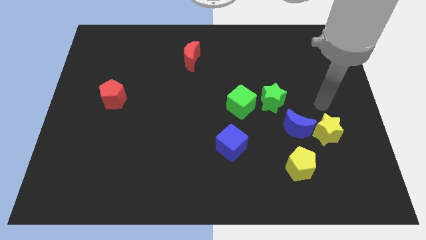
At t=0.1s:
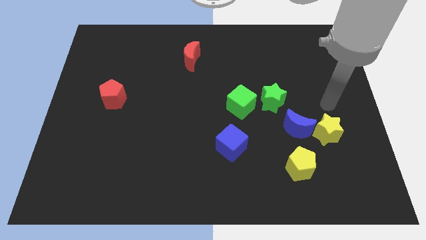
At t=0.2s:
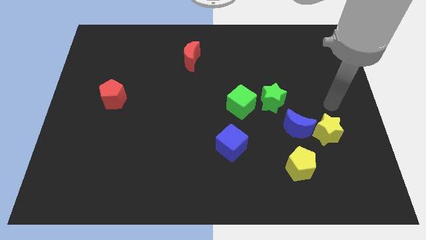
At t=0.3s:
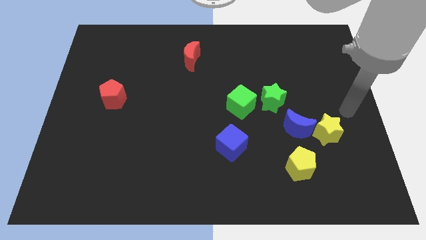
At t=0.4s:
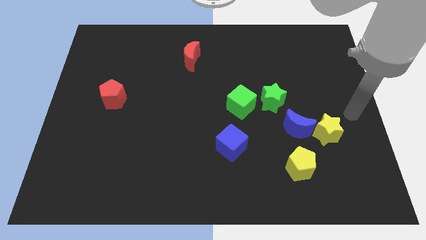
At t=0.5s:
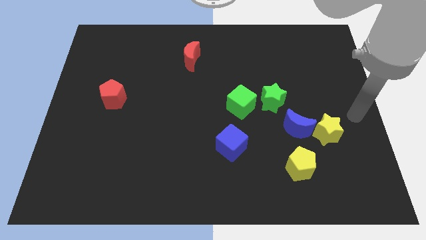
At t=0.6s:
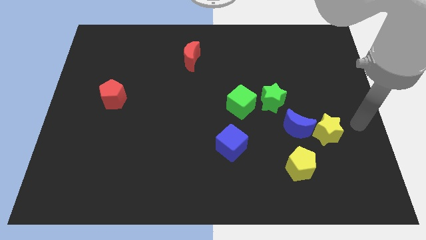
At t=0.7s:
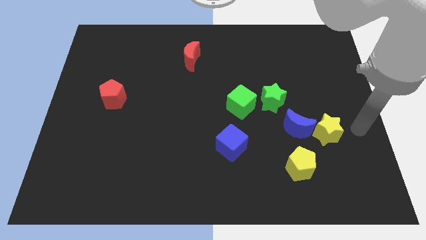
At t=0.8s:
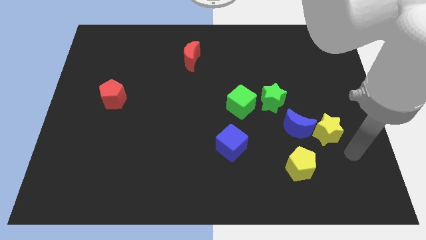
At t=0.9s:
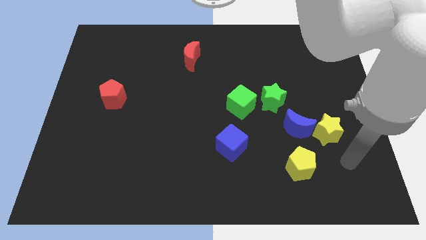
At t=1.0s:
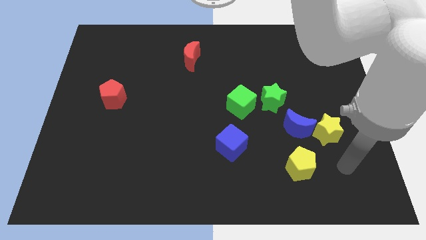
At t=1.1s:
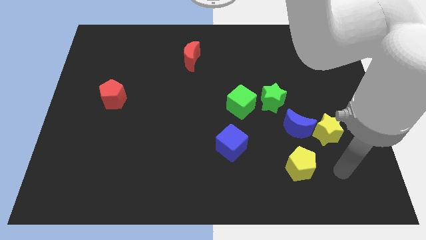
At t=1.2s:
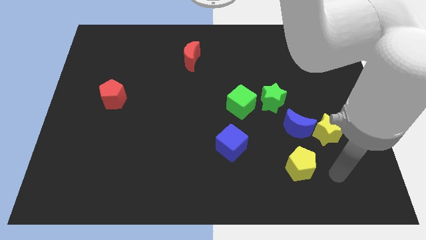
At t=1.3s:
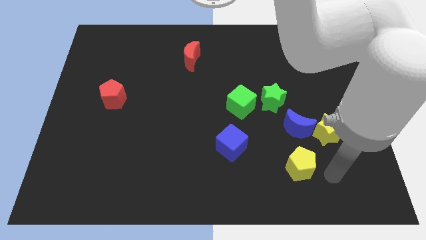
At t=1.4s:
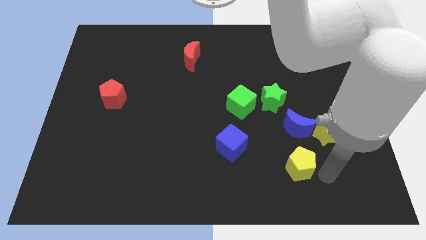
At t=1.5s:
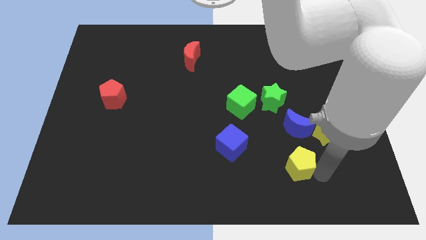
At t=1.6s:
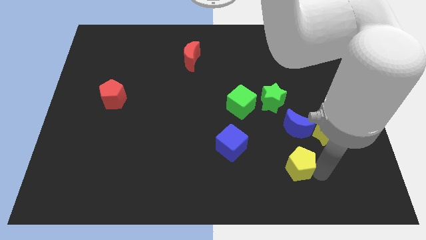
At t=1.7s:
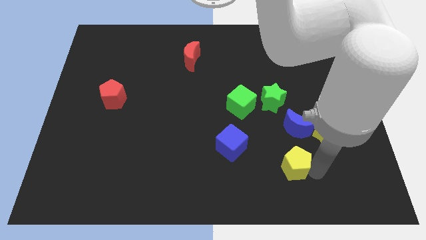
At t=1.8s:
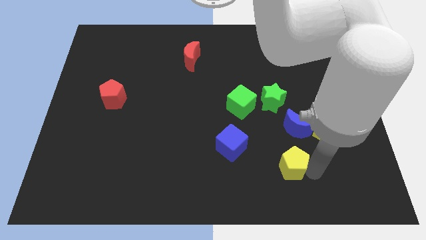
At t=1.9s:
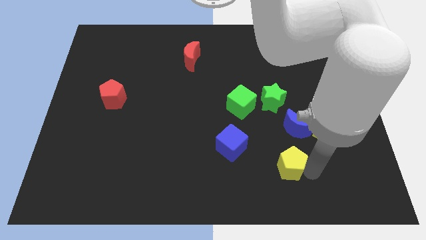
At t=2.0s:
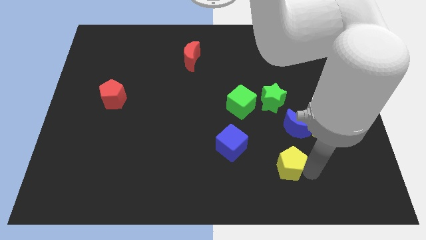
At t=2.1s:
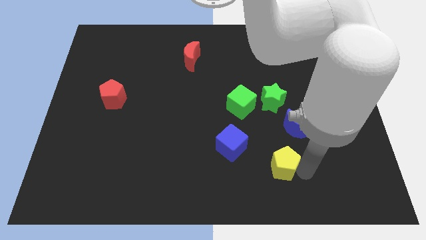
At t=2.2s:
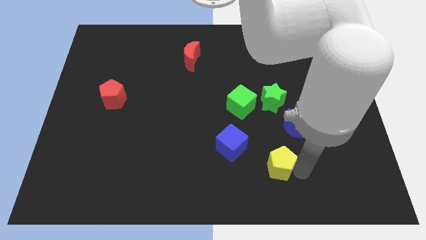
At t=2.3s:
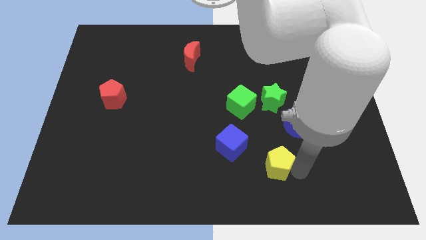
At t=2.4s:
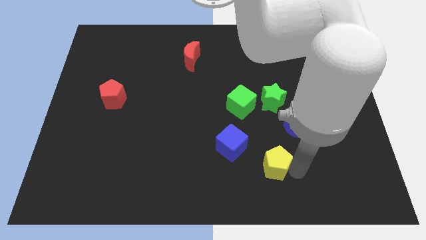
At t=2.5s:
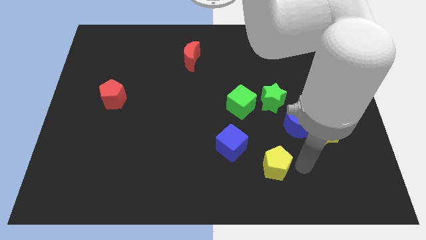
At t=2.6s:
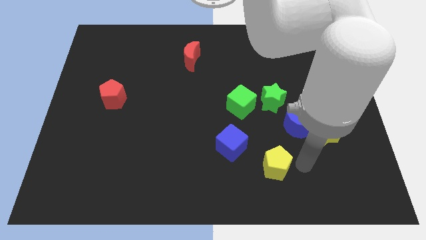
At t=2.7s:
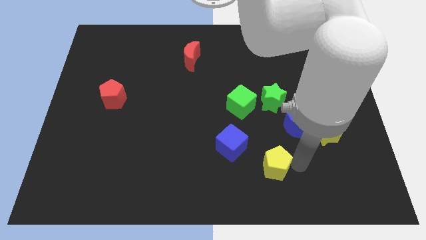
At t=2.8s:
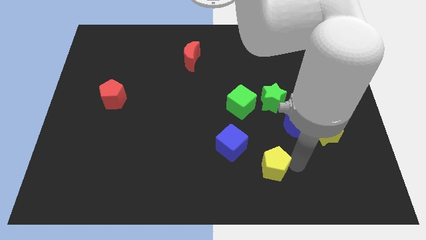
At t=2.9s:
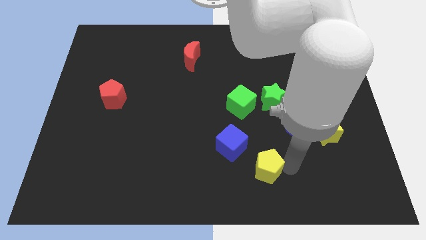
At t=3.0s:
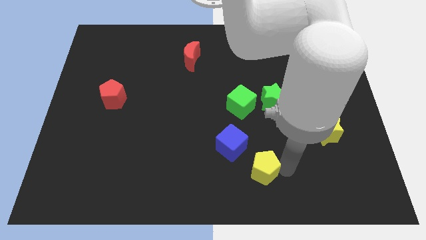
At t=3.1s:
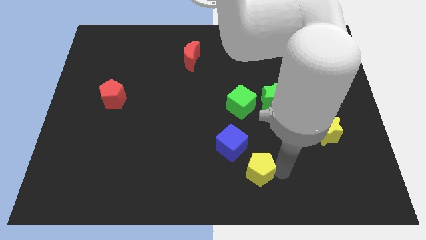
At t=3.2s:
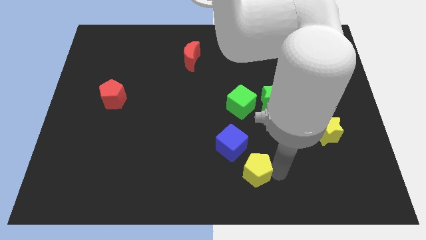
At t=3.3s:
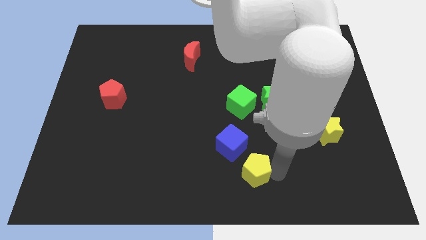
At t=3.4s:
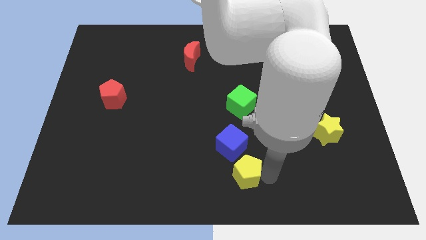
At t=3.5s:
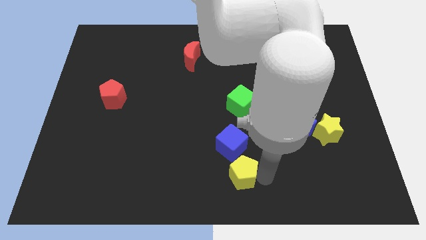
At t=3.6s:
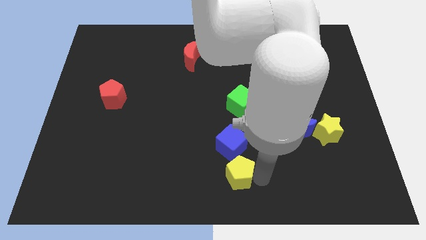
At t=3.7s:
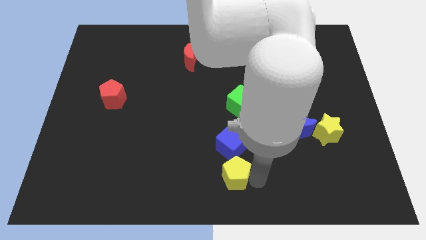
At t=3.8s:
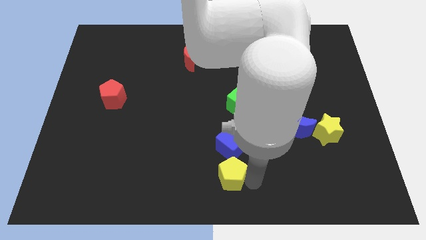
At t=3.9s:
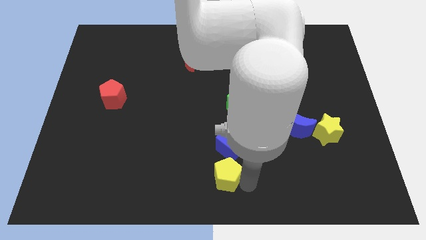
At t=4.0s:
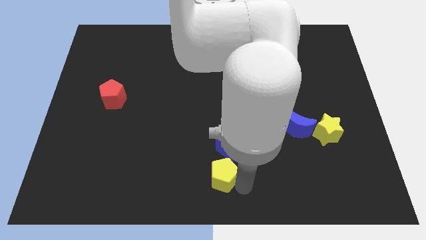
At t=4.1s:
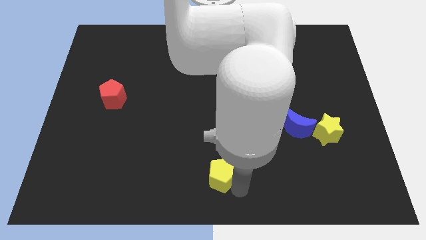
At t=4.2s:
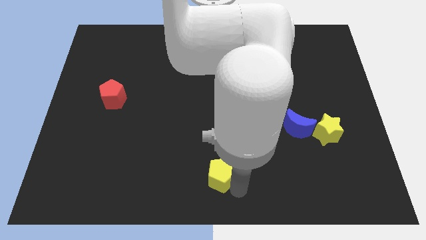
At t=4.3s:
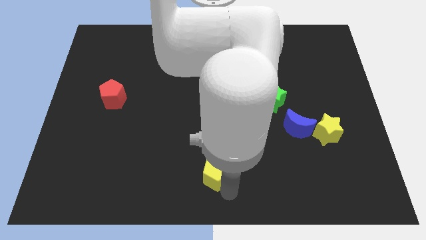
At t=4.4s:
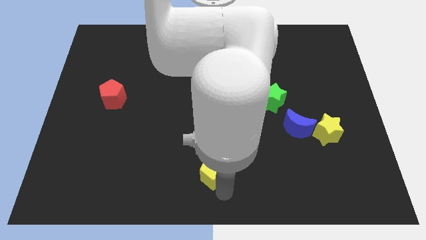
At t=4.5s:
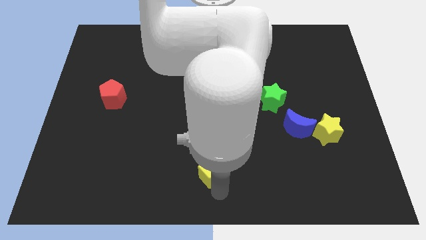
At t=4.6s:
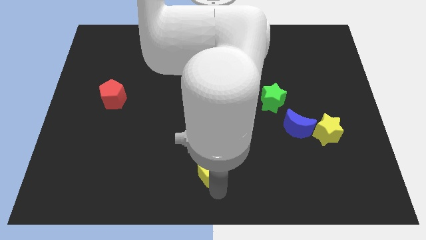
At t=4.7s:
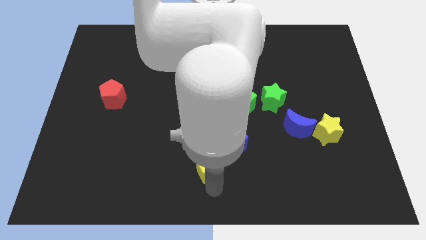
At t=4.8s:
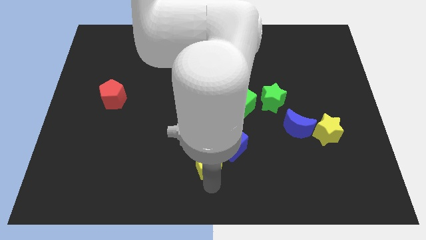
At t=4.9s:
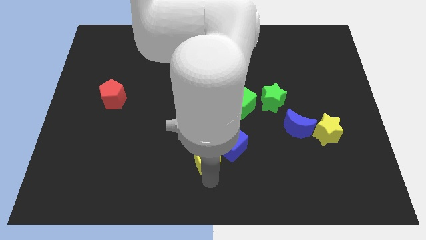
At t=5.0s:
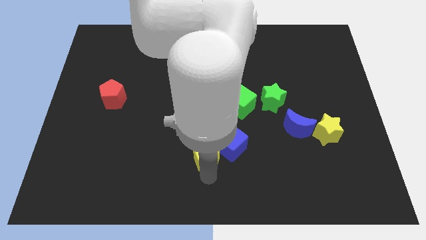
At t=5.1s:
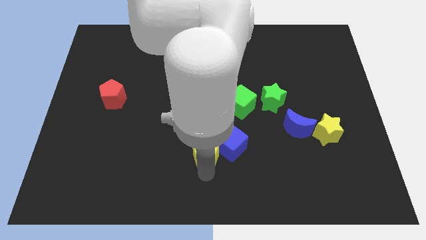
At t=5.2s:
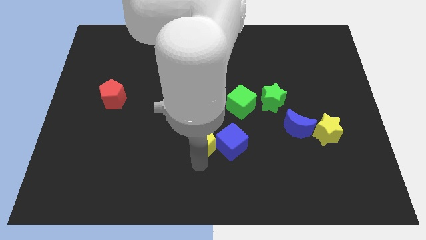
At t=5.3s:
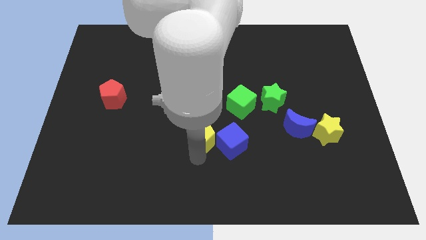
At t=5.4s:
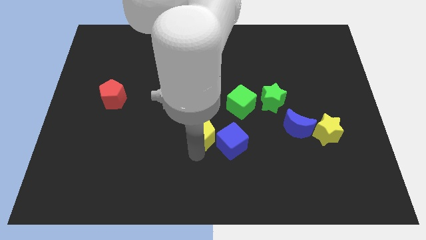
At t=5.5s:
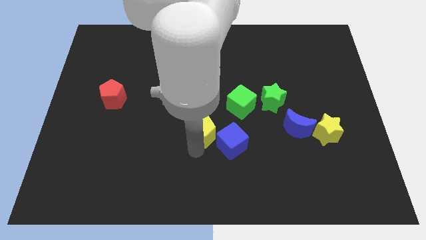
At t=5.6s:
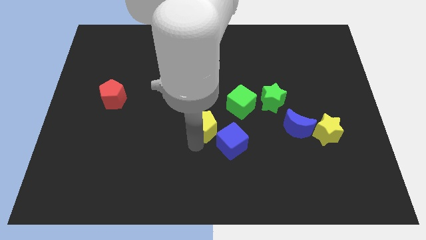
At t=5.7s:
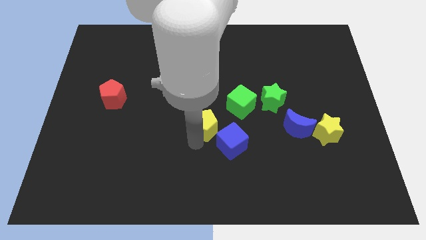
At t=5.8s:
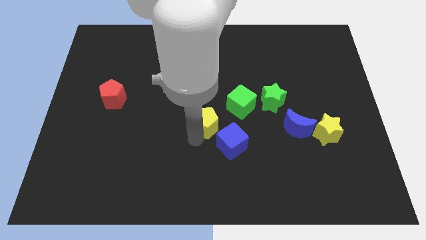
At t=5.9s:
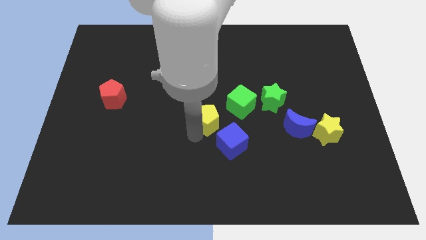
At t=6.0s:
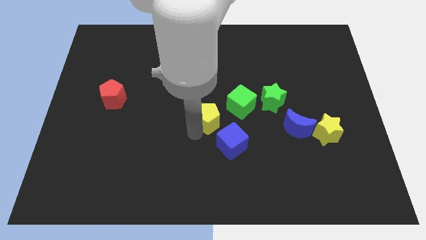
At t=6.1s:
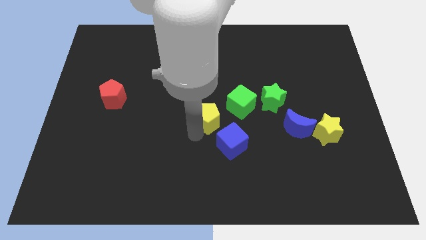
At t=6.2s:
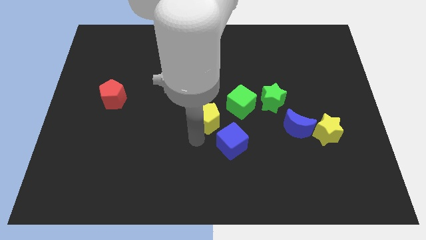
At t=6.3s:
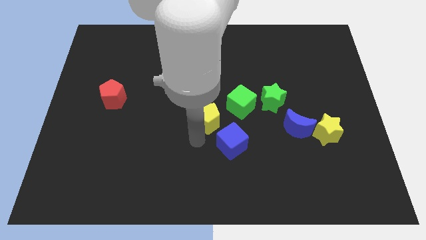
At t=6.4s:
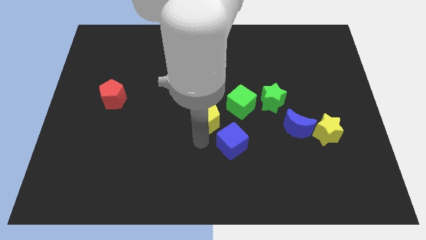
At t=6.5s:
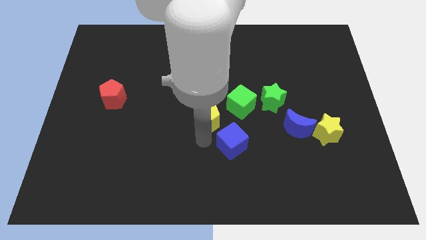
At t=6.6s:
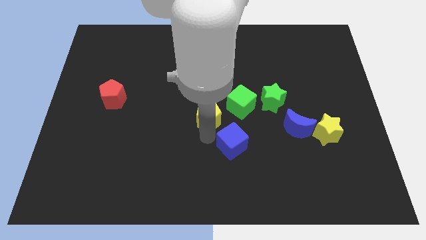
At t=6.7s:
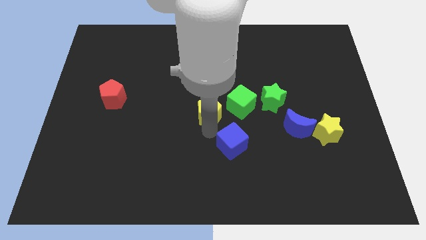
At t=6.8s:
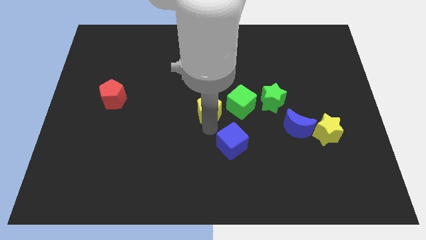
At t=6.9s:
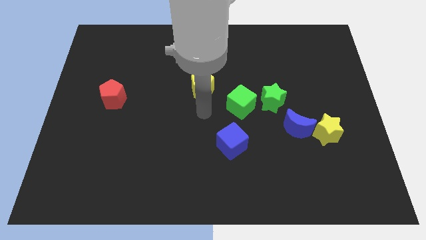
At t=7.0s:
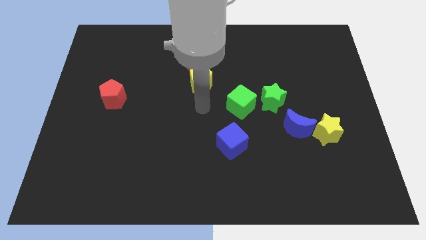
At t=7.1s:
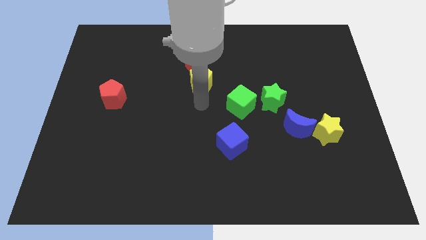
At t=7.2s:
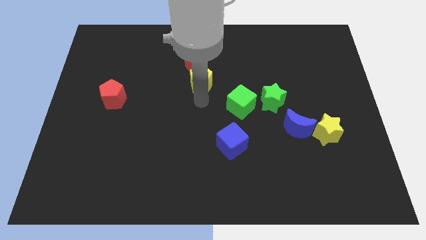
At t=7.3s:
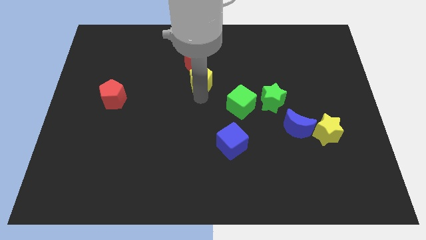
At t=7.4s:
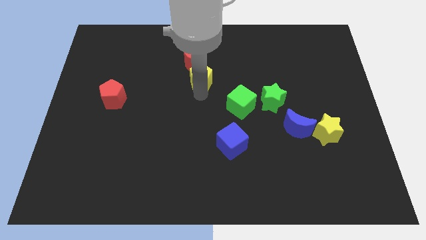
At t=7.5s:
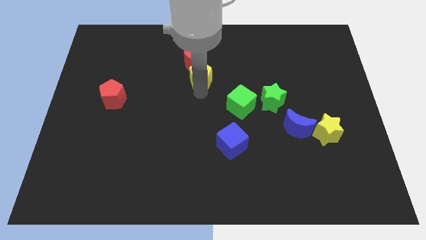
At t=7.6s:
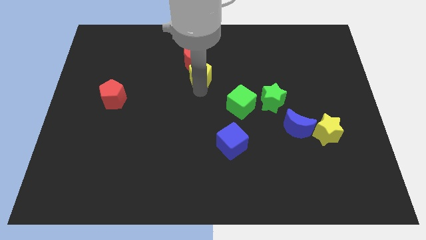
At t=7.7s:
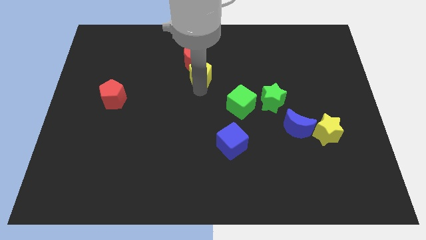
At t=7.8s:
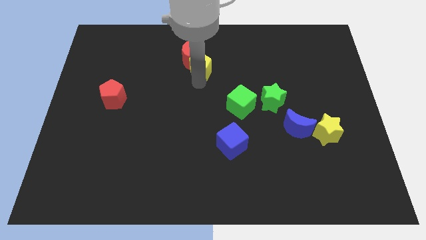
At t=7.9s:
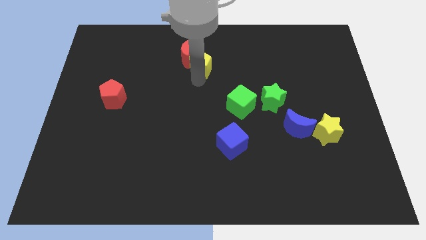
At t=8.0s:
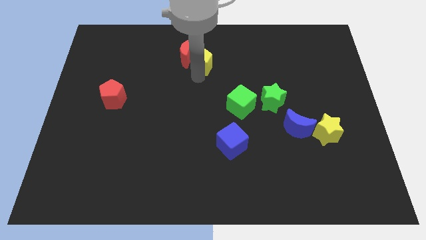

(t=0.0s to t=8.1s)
push the yellow pentagon to the red moon

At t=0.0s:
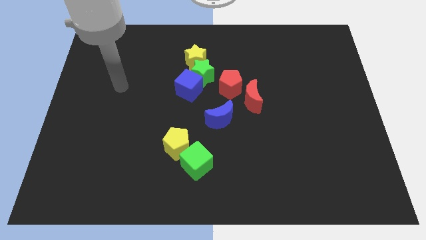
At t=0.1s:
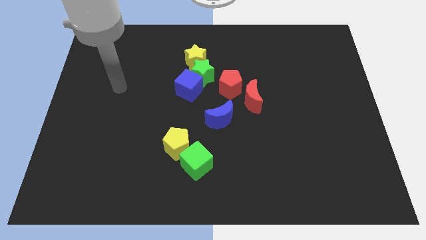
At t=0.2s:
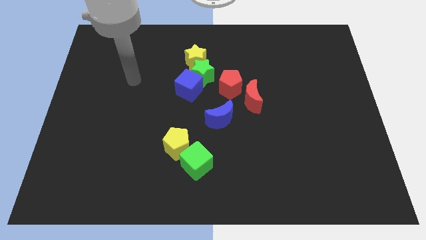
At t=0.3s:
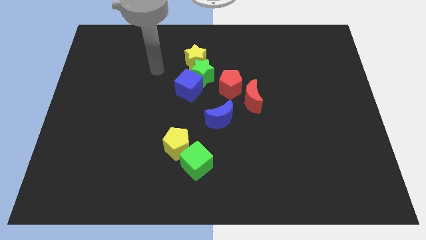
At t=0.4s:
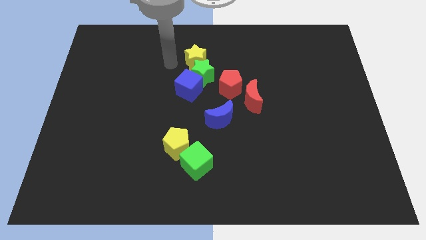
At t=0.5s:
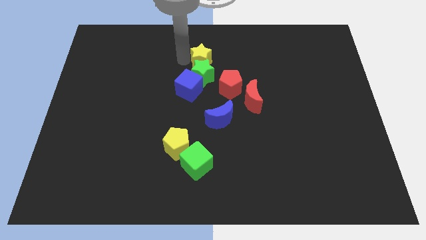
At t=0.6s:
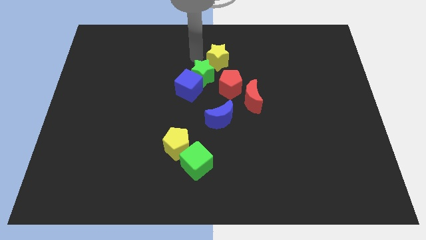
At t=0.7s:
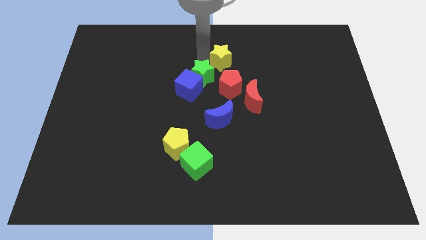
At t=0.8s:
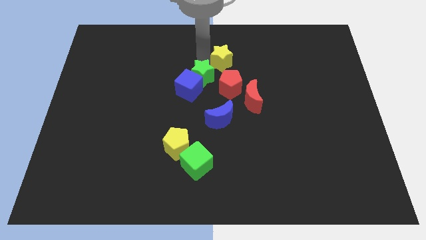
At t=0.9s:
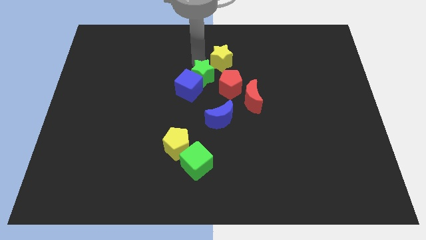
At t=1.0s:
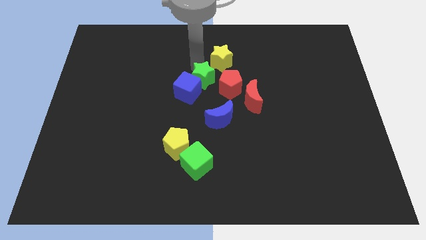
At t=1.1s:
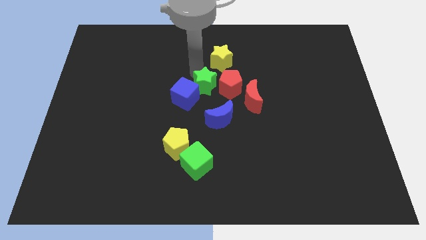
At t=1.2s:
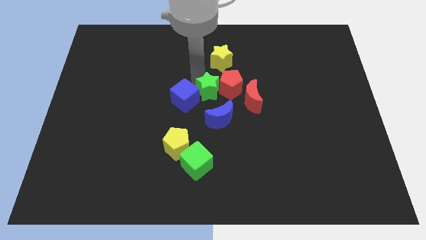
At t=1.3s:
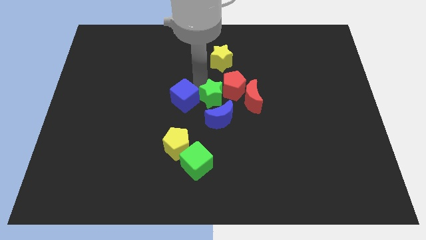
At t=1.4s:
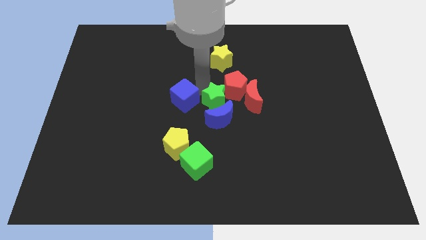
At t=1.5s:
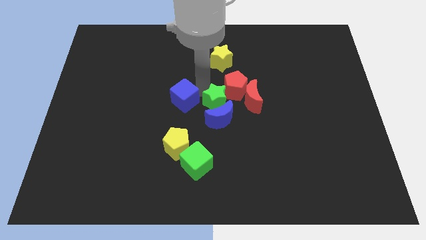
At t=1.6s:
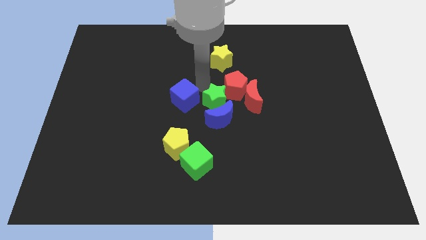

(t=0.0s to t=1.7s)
push the green star towards the blue moon
